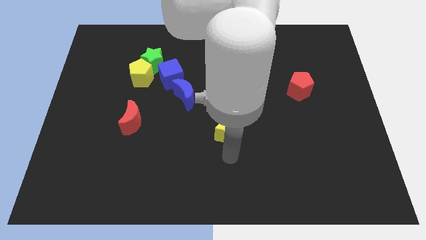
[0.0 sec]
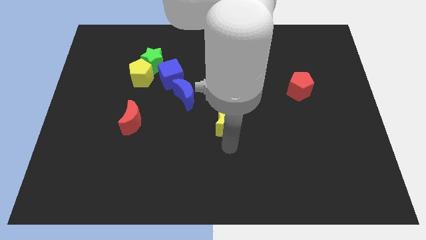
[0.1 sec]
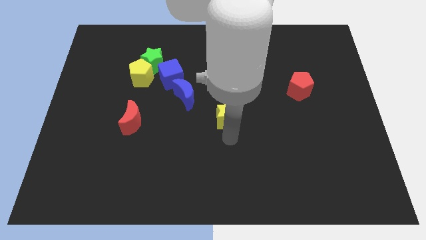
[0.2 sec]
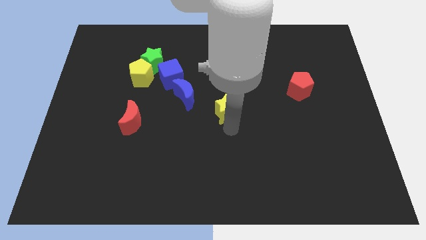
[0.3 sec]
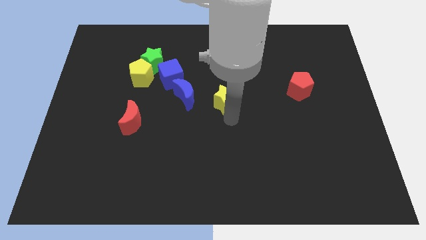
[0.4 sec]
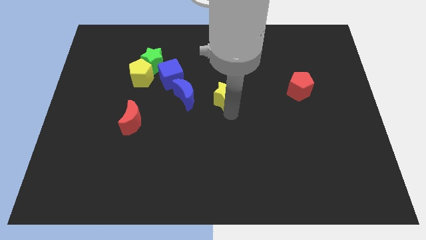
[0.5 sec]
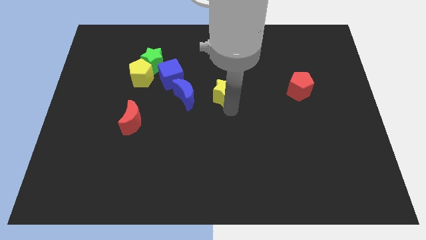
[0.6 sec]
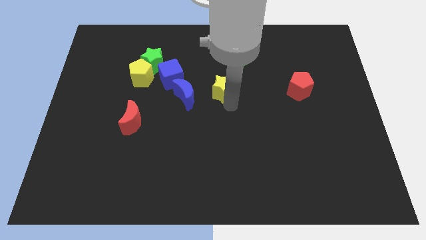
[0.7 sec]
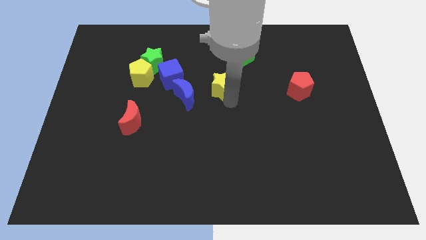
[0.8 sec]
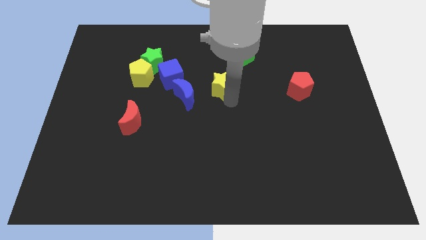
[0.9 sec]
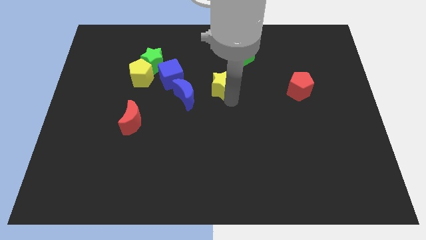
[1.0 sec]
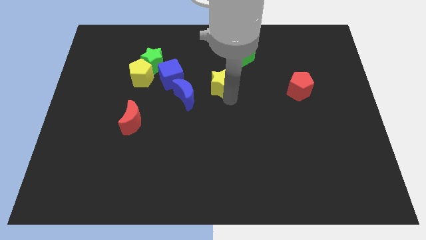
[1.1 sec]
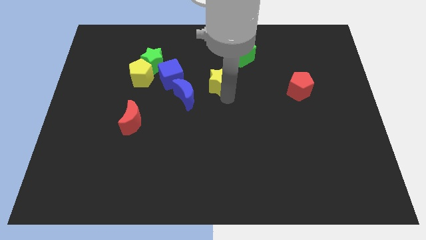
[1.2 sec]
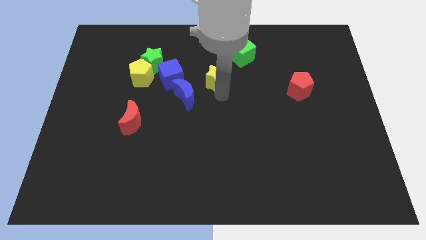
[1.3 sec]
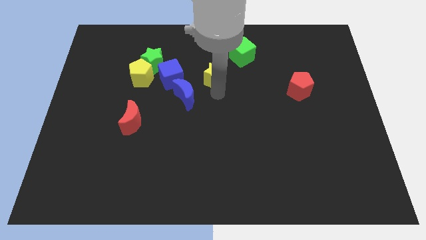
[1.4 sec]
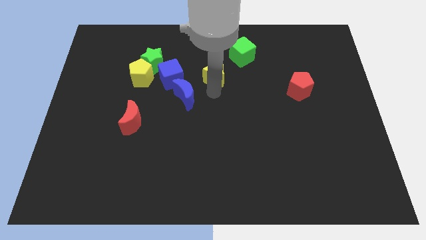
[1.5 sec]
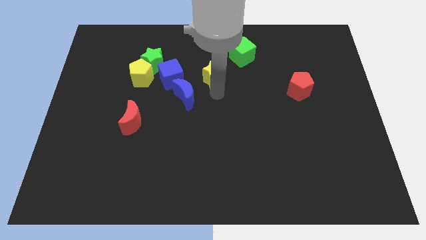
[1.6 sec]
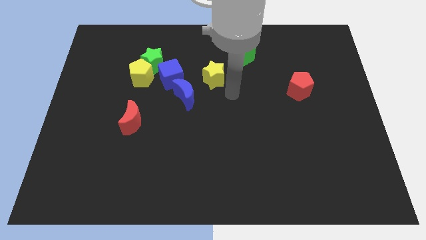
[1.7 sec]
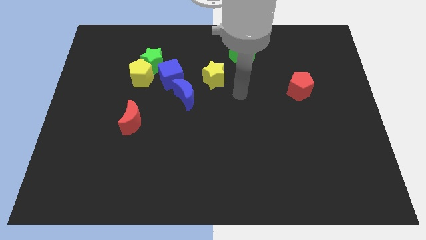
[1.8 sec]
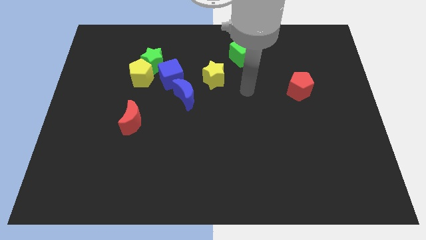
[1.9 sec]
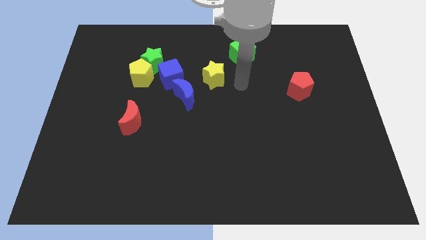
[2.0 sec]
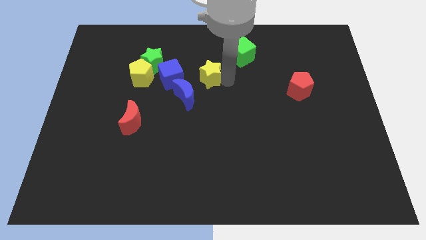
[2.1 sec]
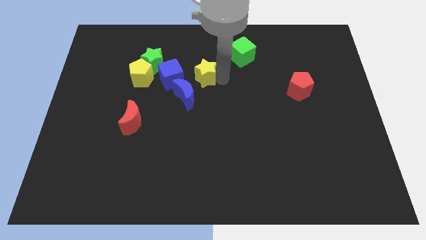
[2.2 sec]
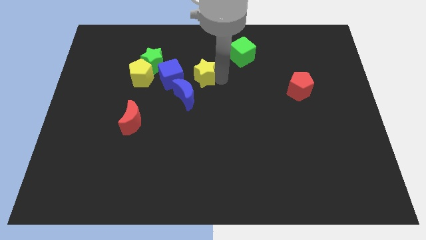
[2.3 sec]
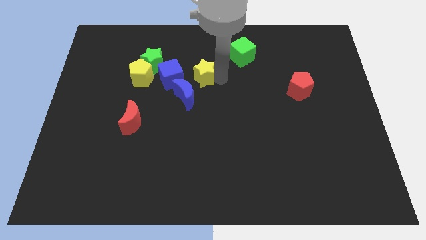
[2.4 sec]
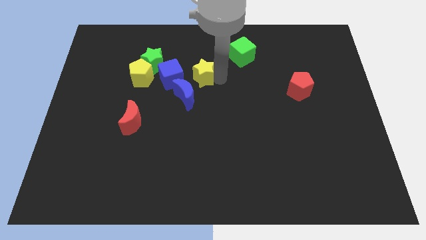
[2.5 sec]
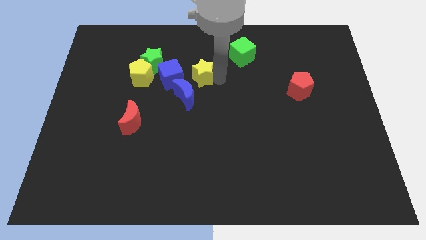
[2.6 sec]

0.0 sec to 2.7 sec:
push the yellow star towards top center of the board

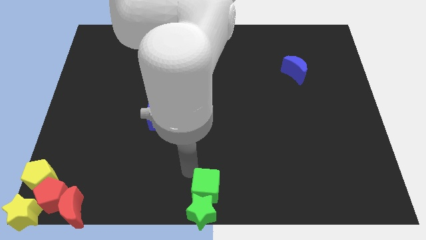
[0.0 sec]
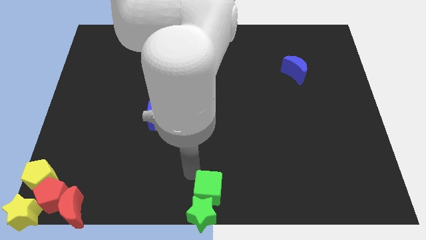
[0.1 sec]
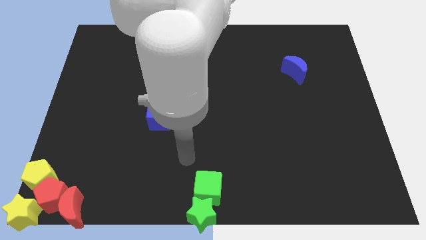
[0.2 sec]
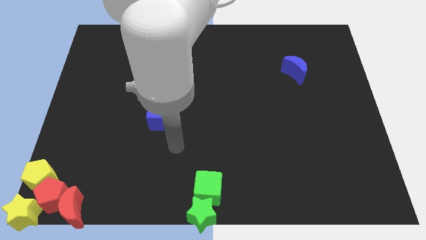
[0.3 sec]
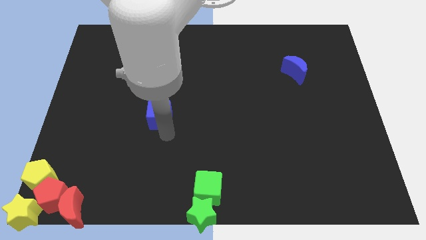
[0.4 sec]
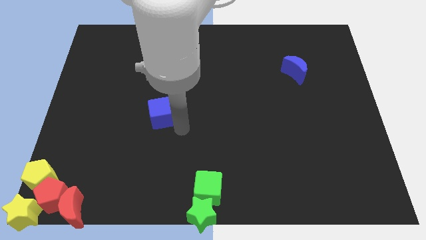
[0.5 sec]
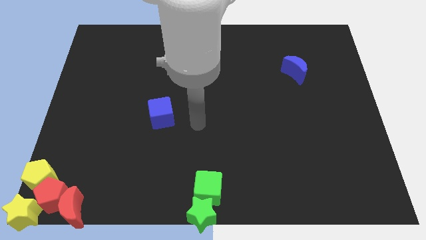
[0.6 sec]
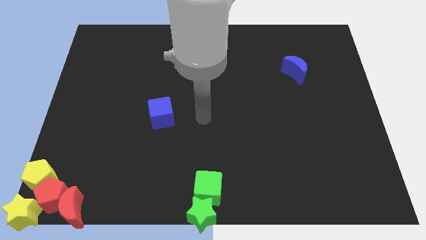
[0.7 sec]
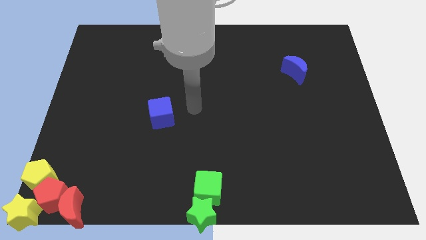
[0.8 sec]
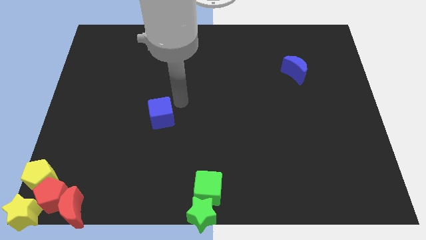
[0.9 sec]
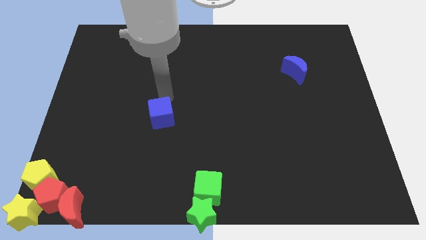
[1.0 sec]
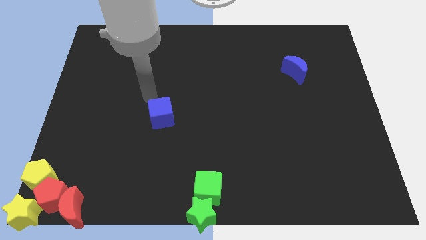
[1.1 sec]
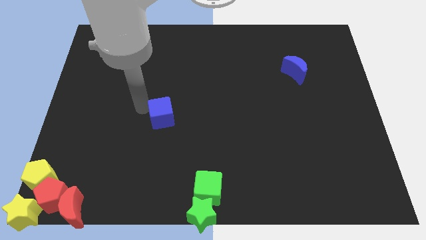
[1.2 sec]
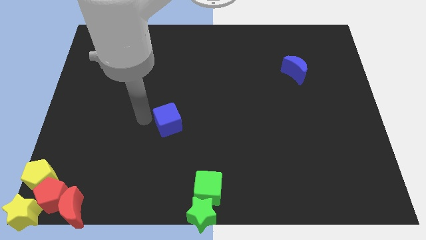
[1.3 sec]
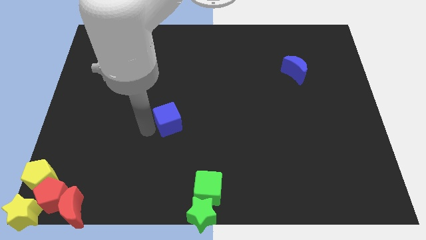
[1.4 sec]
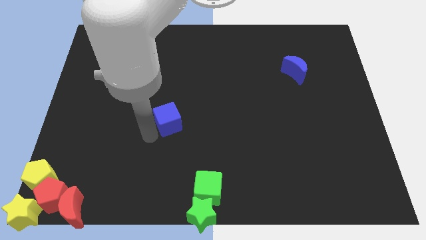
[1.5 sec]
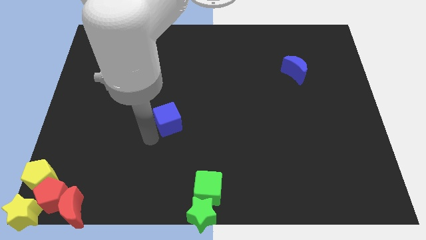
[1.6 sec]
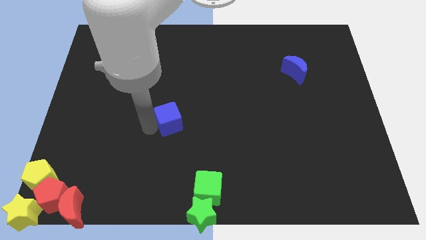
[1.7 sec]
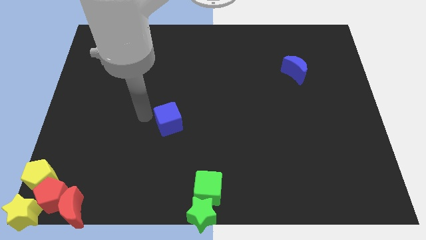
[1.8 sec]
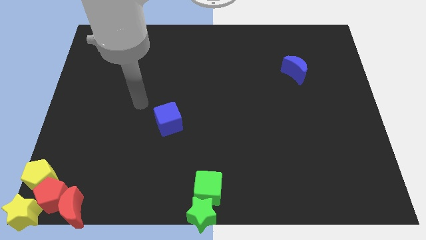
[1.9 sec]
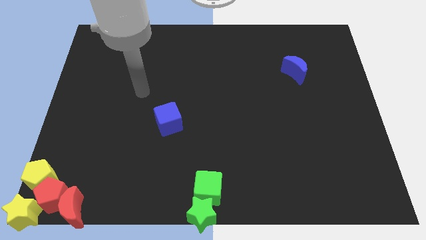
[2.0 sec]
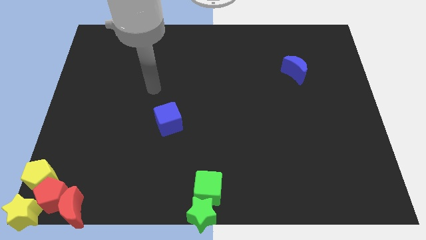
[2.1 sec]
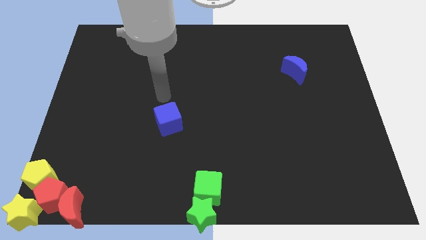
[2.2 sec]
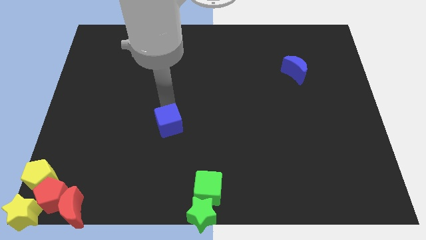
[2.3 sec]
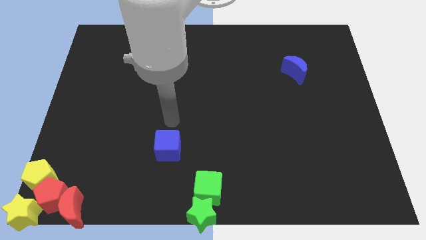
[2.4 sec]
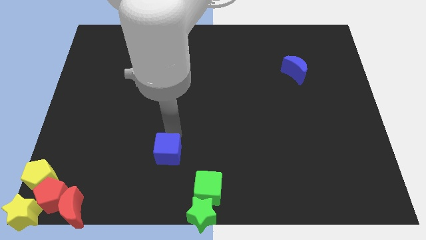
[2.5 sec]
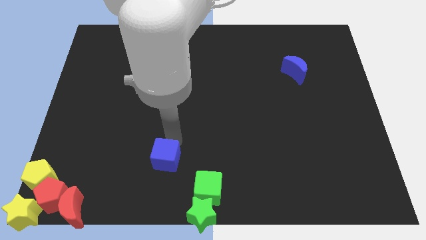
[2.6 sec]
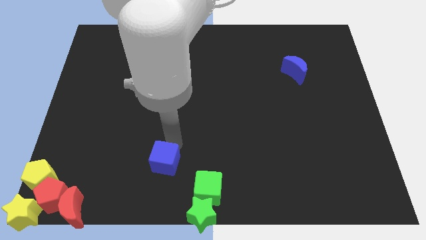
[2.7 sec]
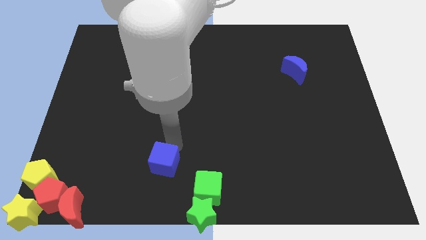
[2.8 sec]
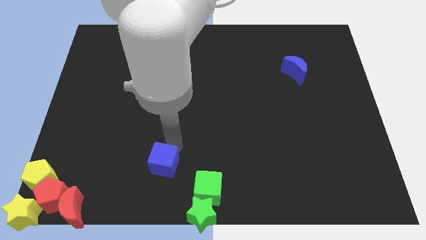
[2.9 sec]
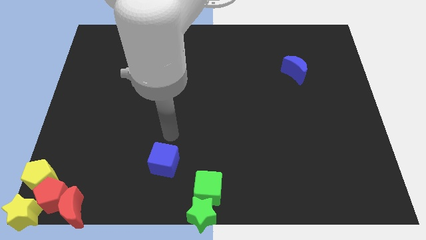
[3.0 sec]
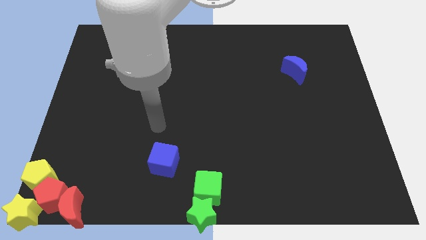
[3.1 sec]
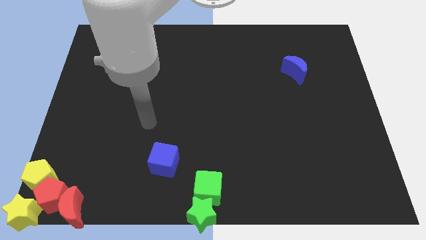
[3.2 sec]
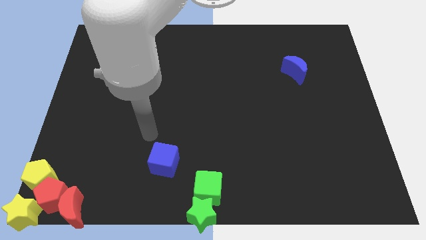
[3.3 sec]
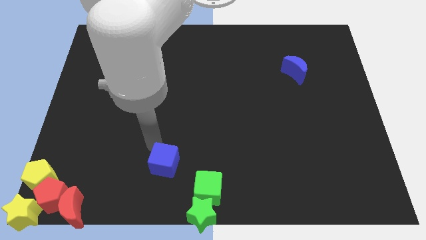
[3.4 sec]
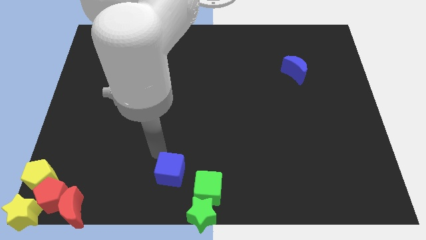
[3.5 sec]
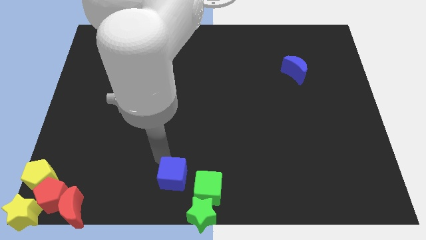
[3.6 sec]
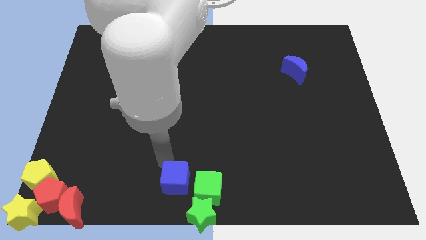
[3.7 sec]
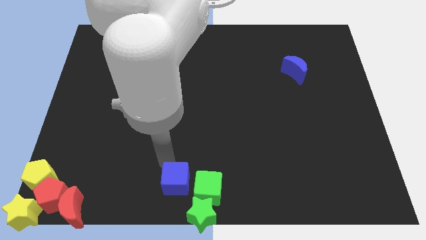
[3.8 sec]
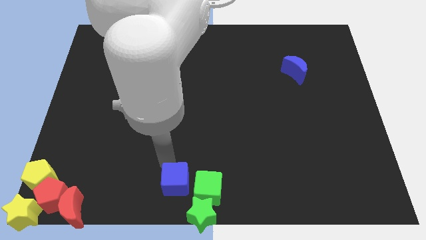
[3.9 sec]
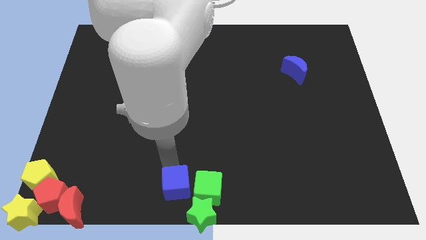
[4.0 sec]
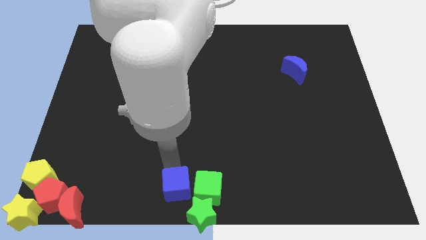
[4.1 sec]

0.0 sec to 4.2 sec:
place the blue cube left to the green cube

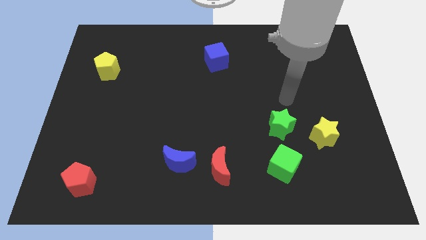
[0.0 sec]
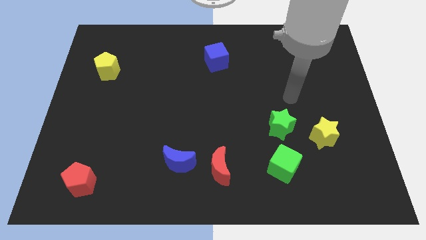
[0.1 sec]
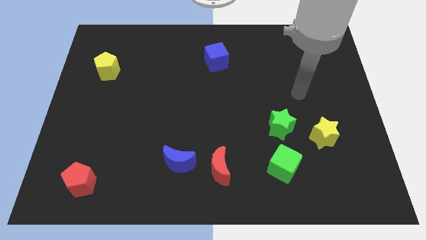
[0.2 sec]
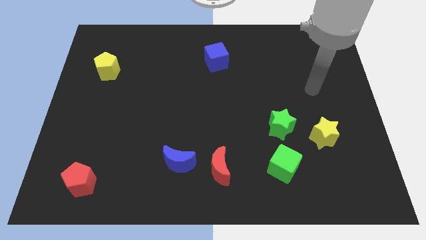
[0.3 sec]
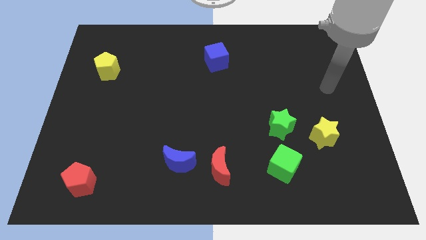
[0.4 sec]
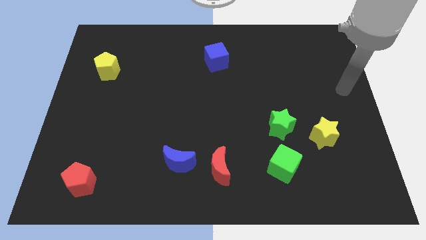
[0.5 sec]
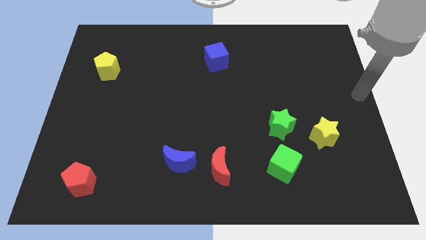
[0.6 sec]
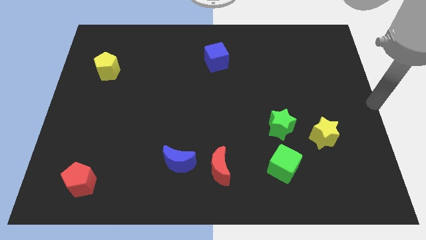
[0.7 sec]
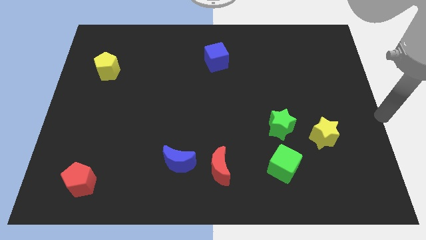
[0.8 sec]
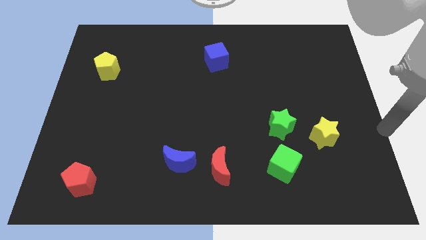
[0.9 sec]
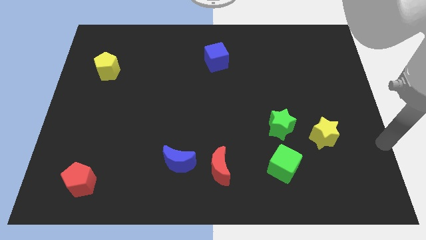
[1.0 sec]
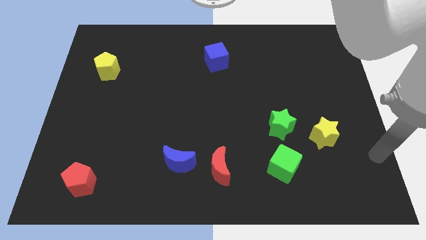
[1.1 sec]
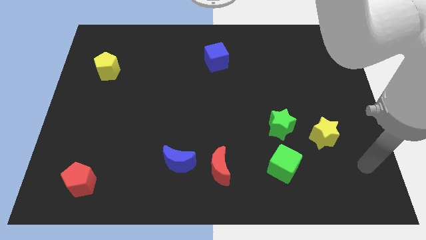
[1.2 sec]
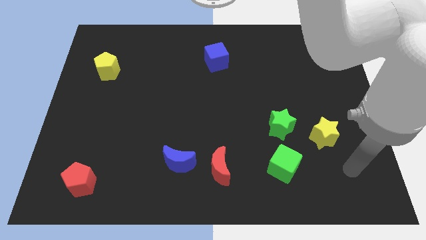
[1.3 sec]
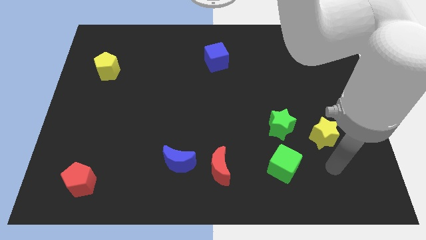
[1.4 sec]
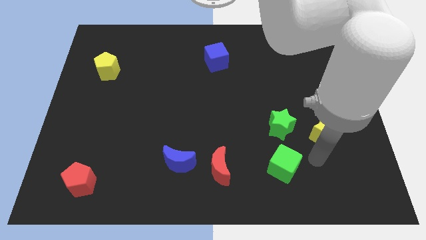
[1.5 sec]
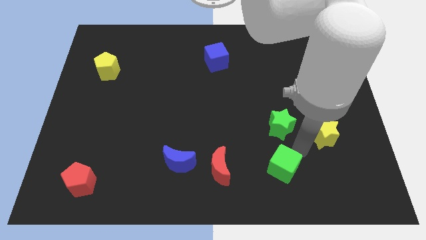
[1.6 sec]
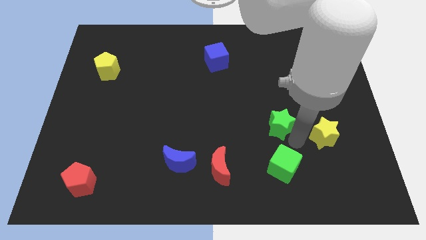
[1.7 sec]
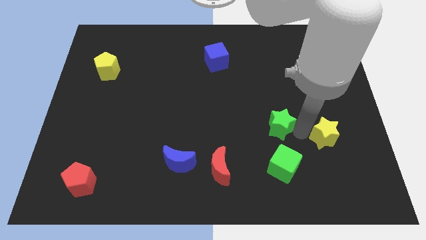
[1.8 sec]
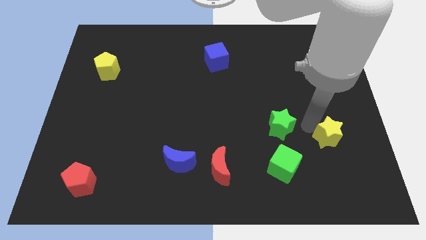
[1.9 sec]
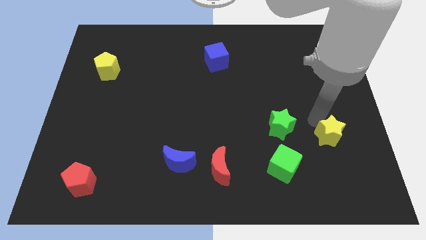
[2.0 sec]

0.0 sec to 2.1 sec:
slightly push the yellow star to the right
